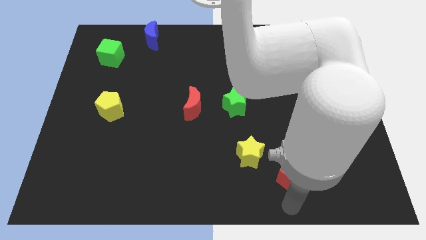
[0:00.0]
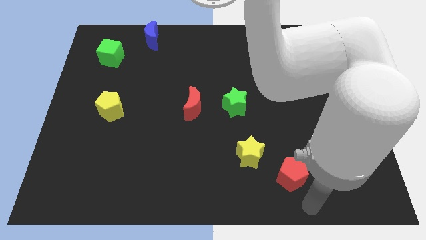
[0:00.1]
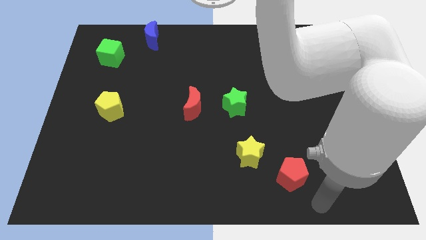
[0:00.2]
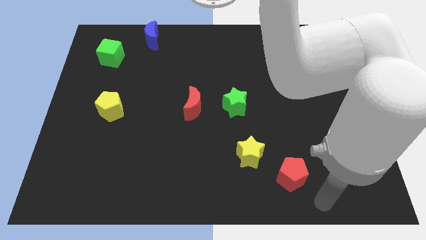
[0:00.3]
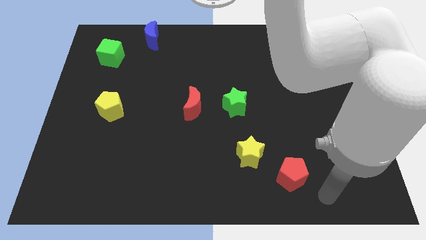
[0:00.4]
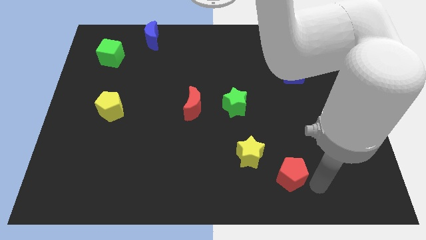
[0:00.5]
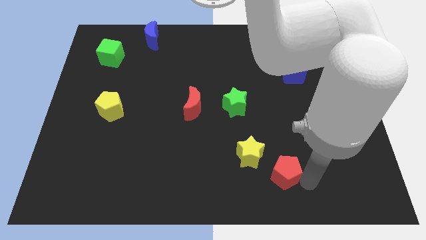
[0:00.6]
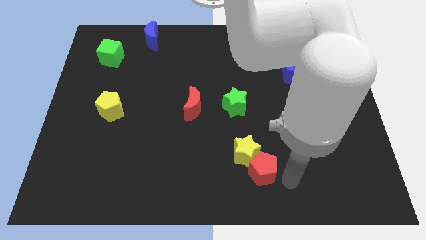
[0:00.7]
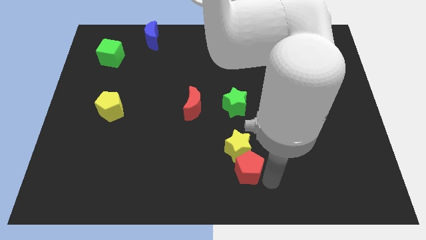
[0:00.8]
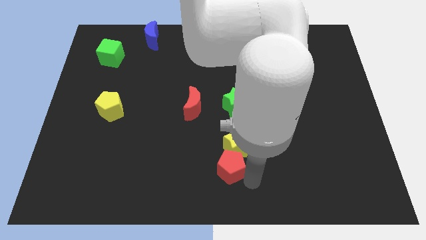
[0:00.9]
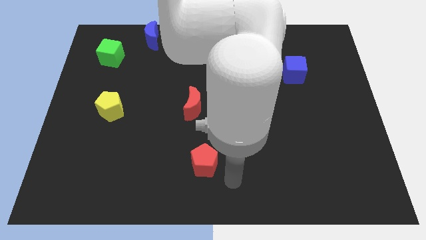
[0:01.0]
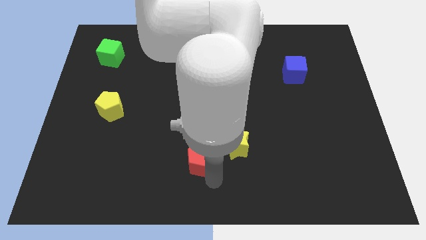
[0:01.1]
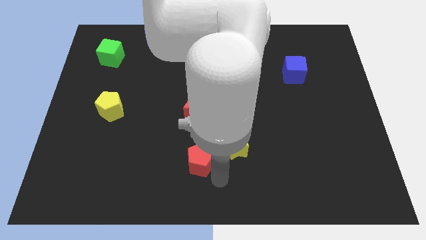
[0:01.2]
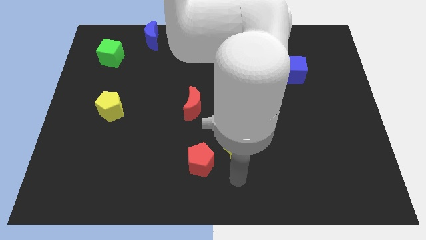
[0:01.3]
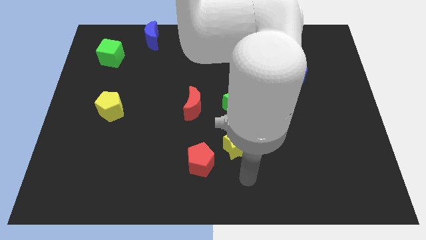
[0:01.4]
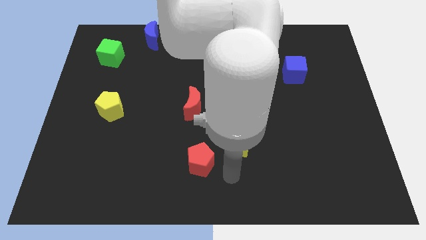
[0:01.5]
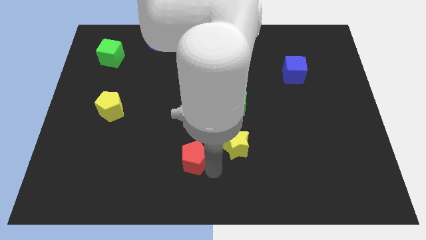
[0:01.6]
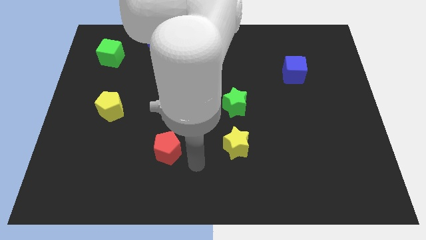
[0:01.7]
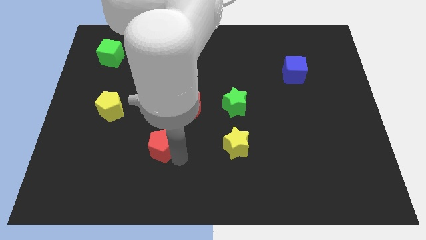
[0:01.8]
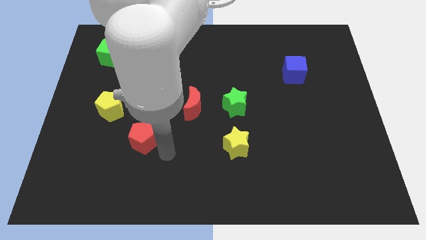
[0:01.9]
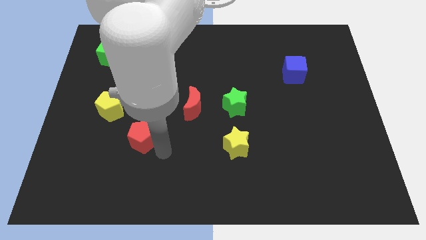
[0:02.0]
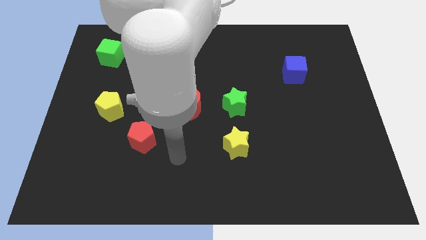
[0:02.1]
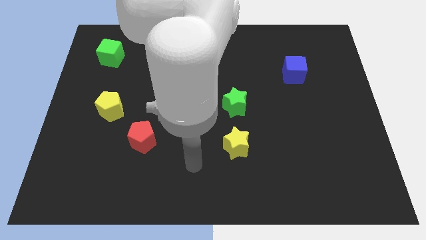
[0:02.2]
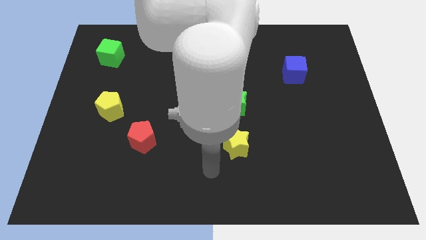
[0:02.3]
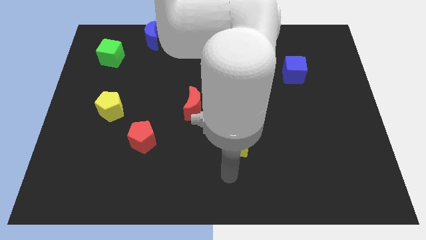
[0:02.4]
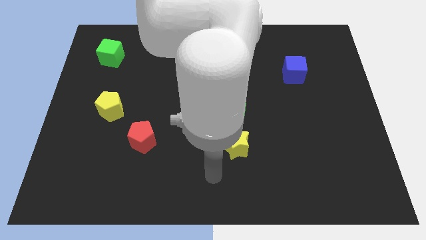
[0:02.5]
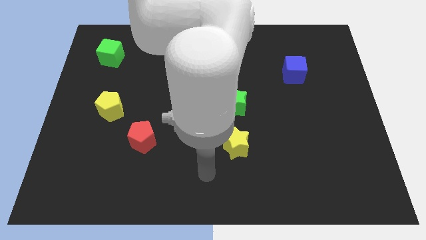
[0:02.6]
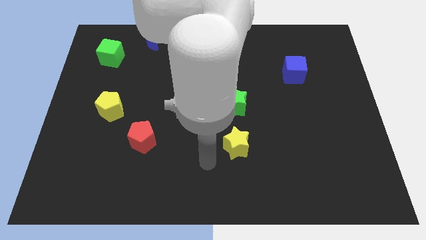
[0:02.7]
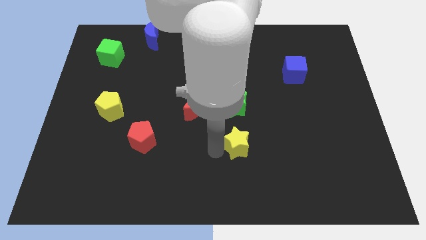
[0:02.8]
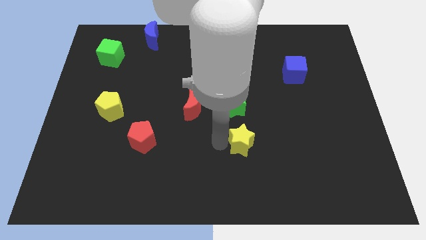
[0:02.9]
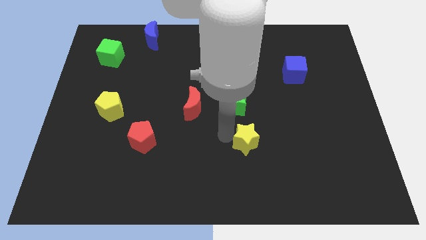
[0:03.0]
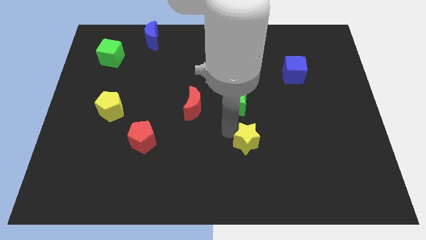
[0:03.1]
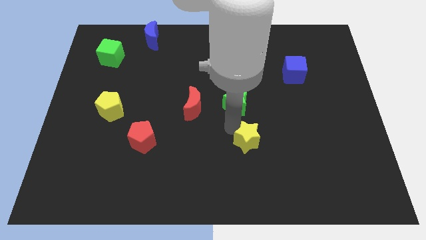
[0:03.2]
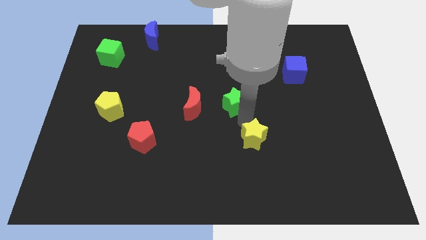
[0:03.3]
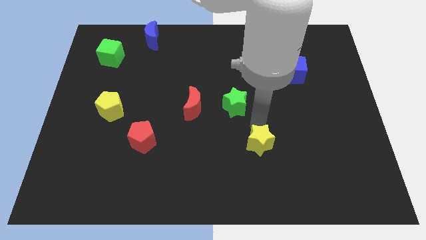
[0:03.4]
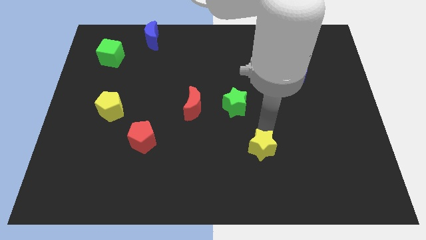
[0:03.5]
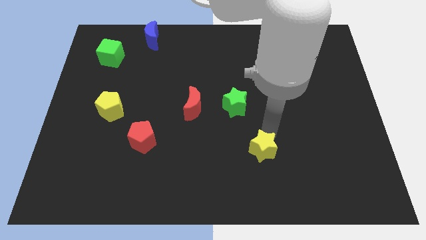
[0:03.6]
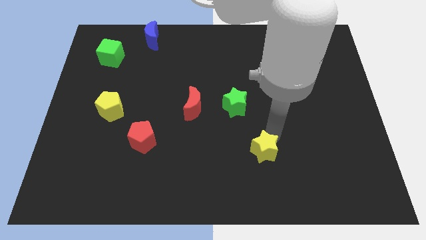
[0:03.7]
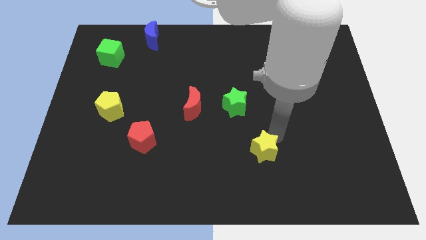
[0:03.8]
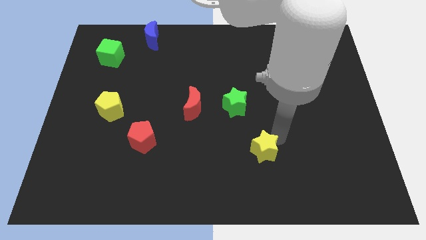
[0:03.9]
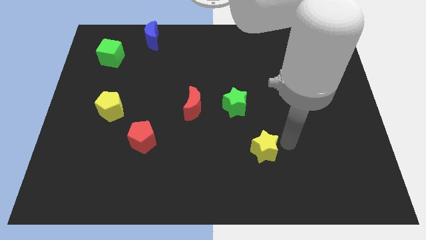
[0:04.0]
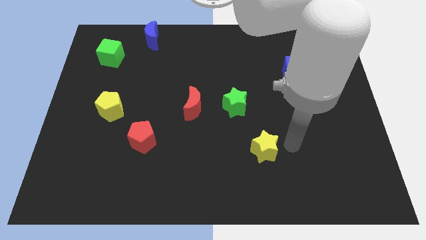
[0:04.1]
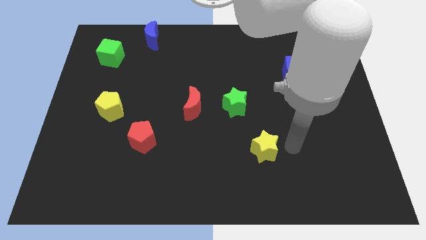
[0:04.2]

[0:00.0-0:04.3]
slightly move the yellow star

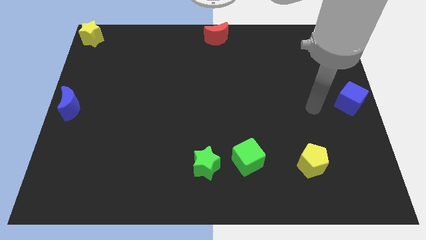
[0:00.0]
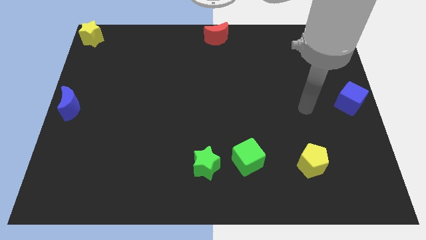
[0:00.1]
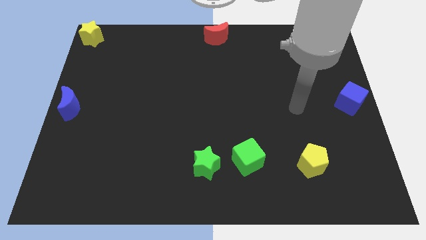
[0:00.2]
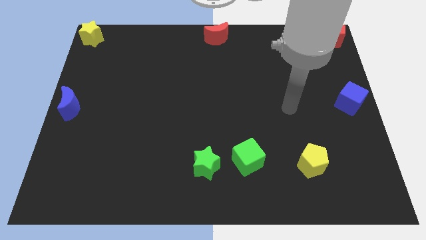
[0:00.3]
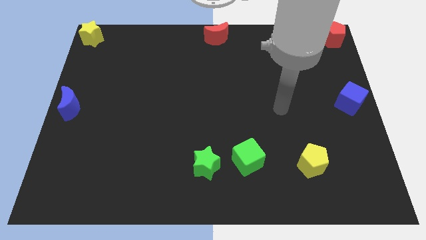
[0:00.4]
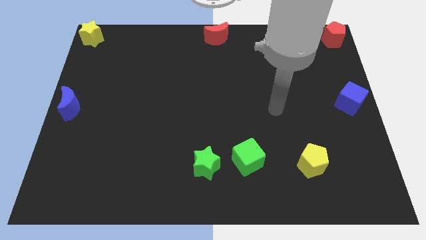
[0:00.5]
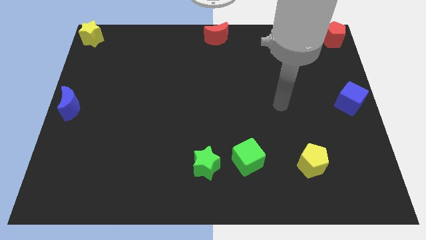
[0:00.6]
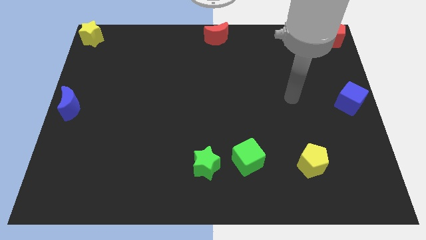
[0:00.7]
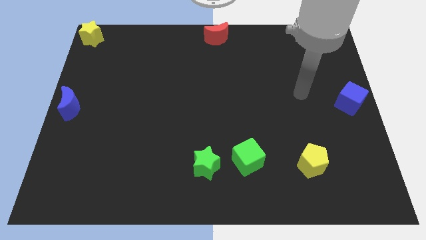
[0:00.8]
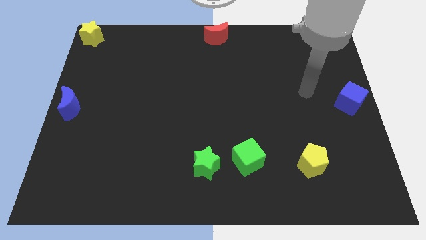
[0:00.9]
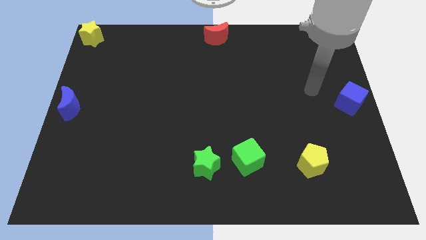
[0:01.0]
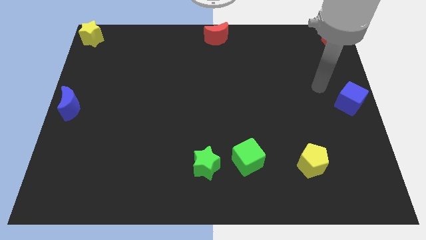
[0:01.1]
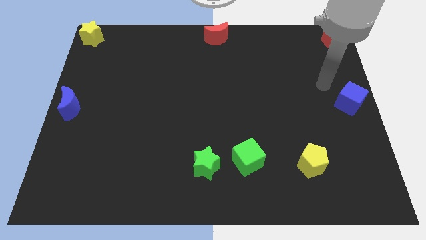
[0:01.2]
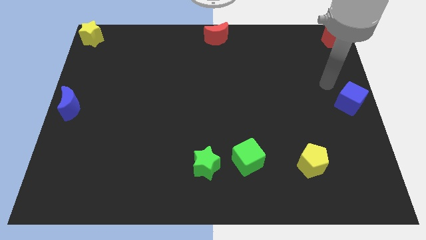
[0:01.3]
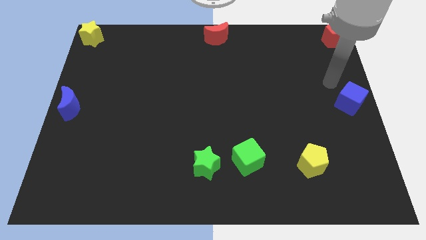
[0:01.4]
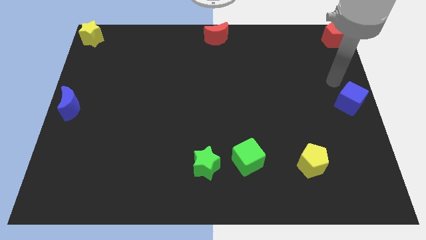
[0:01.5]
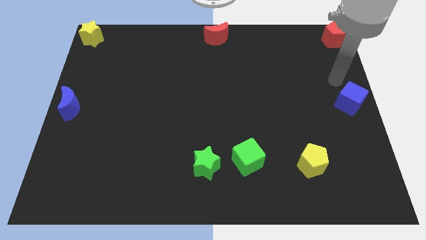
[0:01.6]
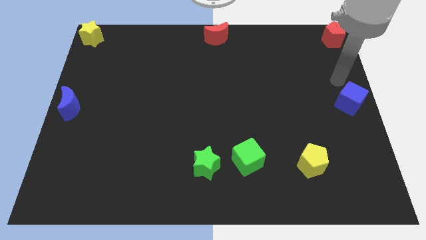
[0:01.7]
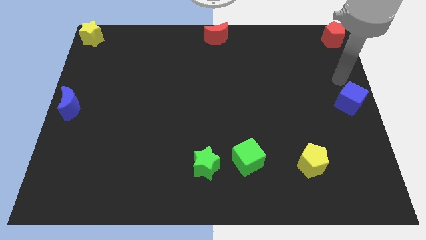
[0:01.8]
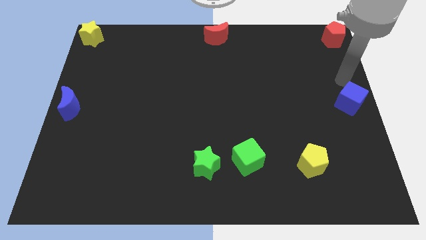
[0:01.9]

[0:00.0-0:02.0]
move your arm towards the blue cube

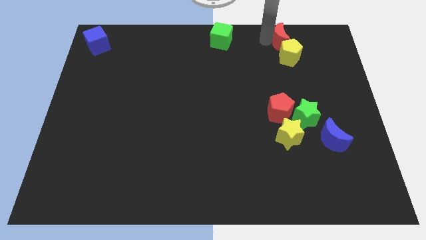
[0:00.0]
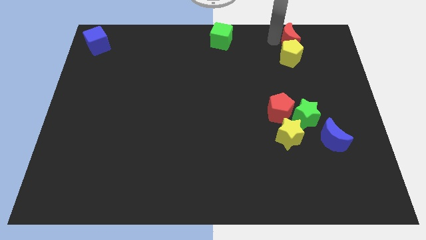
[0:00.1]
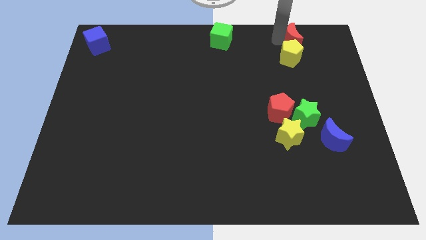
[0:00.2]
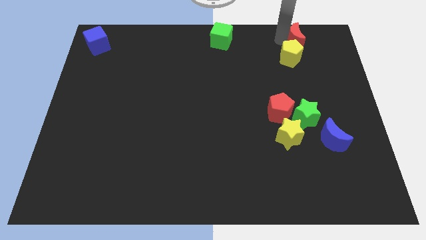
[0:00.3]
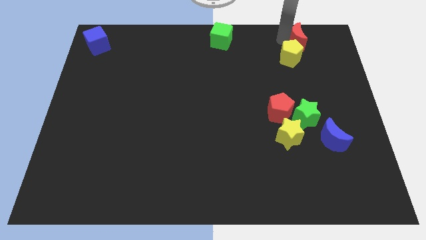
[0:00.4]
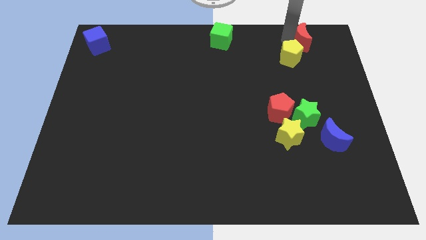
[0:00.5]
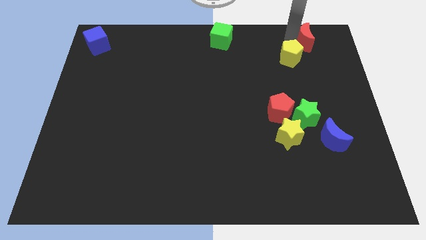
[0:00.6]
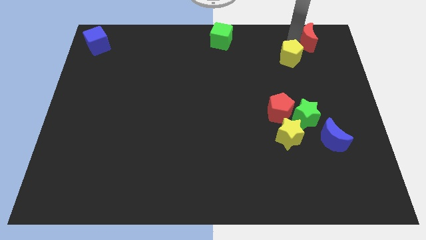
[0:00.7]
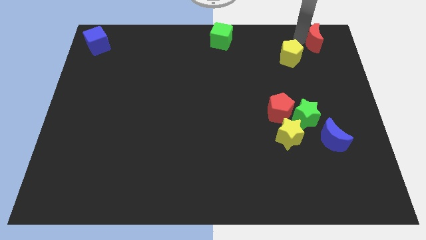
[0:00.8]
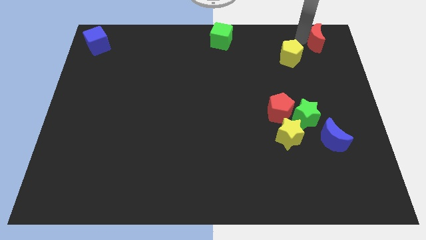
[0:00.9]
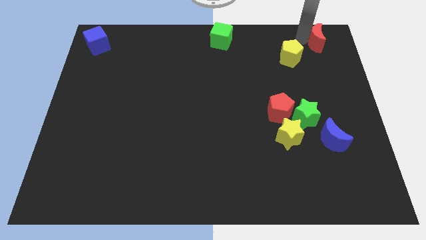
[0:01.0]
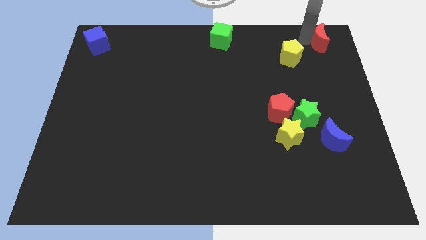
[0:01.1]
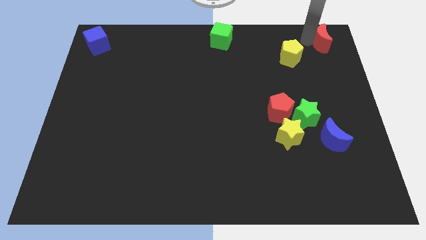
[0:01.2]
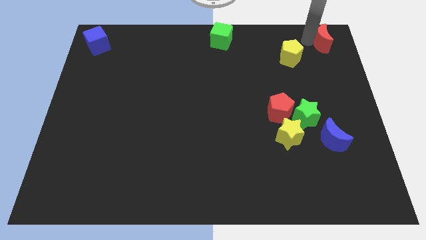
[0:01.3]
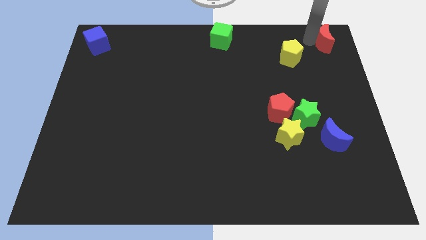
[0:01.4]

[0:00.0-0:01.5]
move red moon to the top right corner of the board

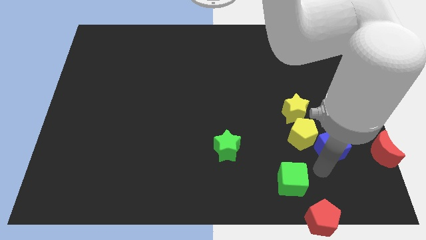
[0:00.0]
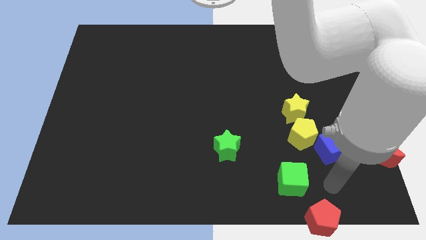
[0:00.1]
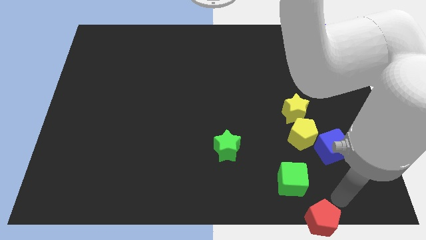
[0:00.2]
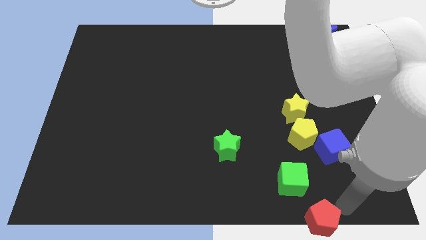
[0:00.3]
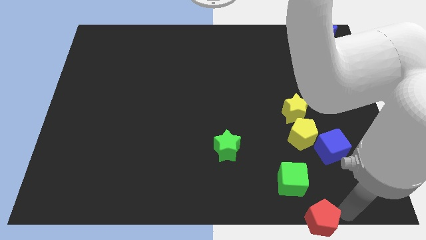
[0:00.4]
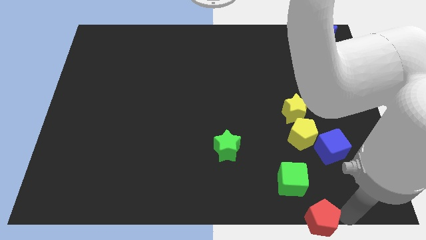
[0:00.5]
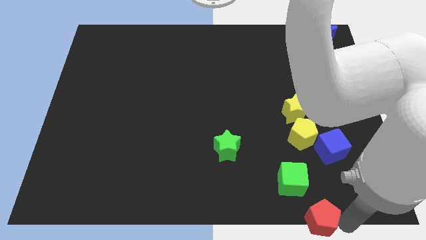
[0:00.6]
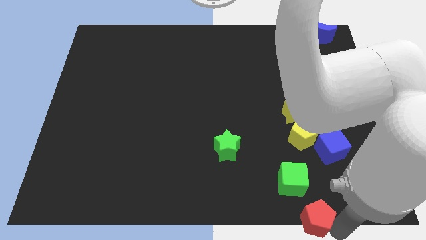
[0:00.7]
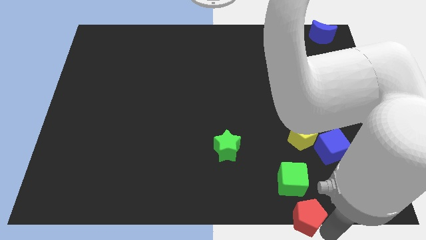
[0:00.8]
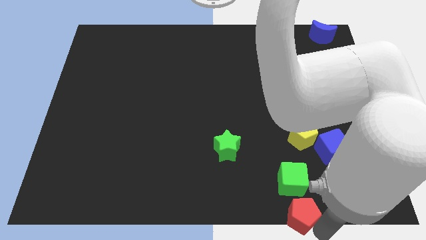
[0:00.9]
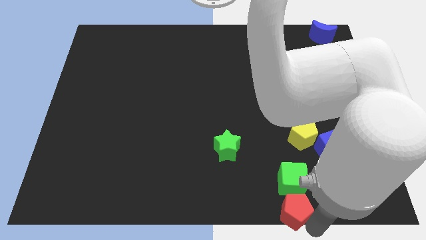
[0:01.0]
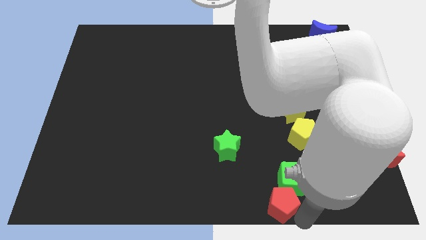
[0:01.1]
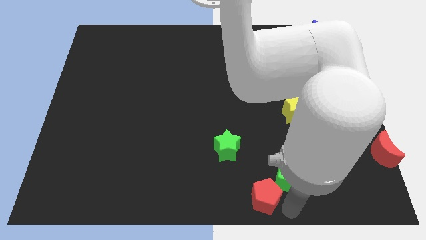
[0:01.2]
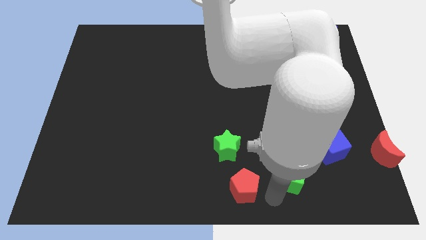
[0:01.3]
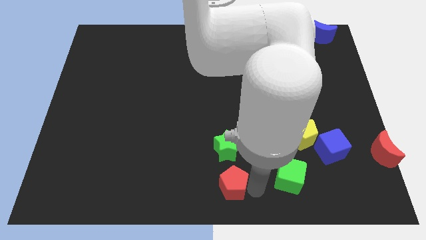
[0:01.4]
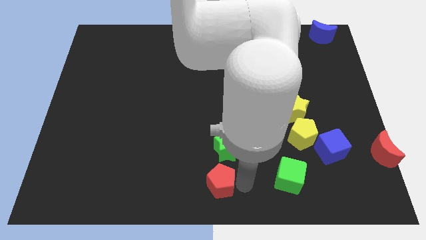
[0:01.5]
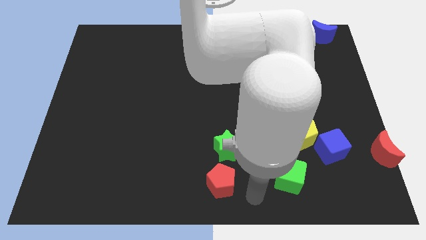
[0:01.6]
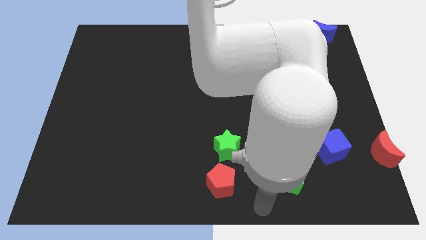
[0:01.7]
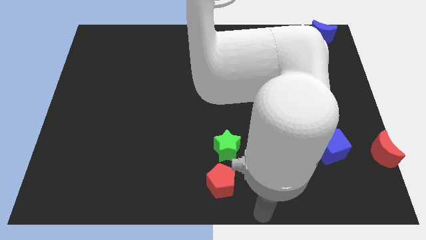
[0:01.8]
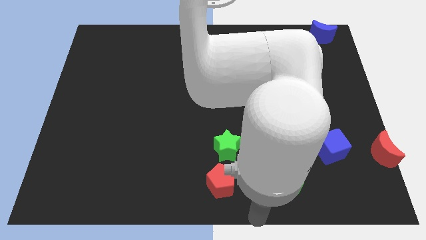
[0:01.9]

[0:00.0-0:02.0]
put the red pentagon underneath the green star
